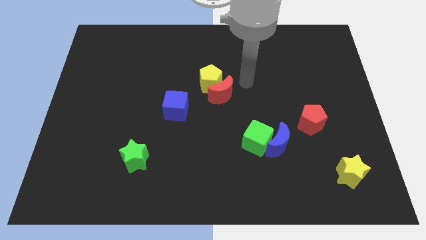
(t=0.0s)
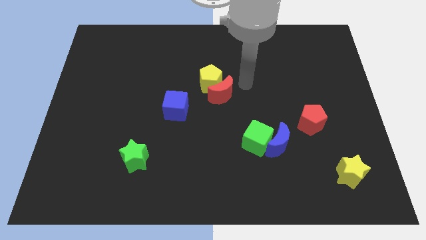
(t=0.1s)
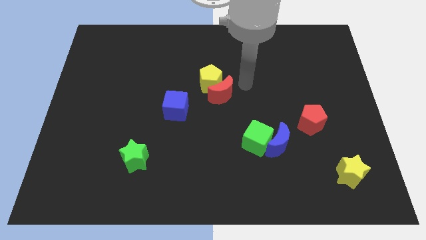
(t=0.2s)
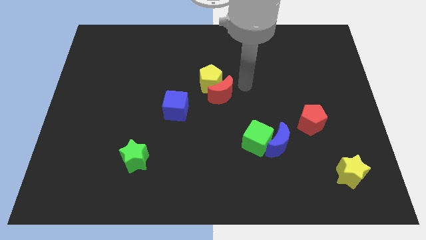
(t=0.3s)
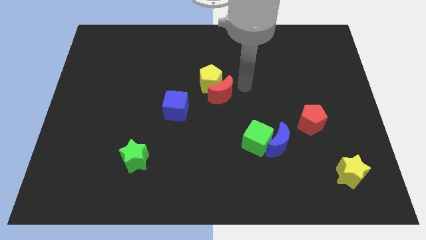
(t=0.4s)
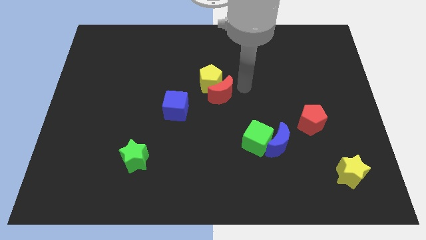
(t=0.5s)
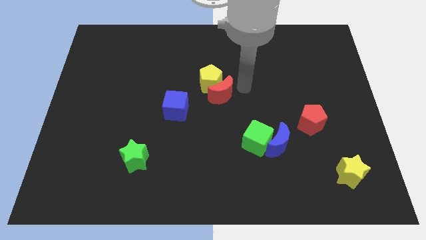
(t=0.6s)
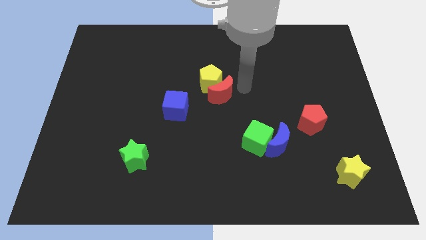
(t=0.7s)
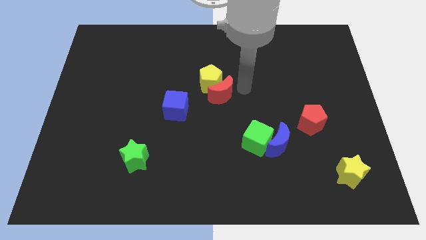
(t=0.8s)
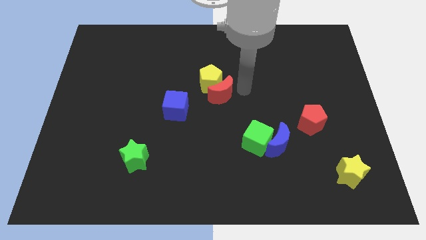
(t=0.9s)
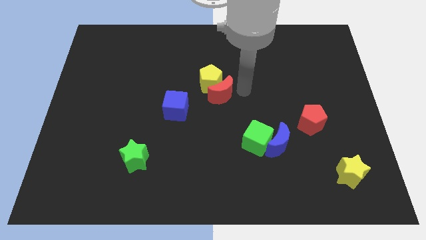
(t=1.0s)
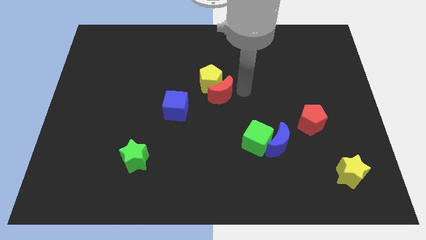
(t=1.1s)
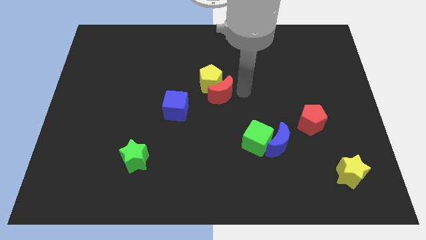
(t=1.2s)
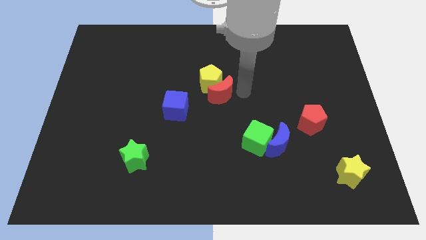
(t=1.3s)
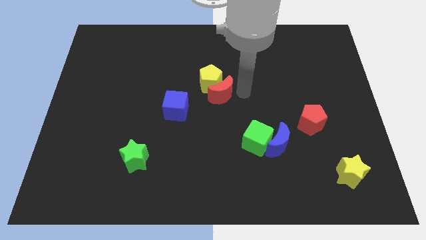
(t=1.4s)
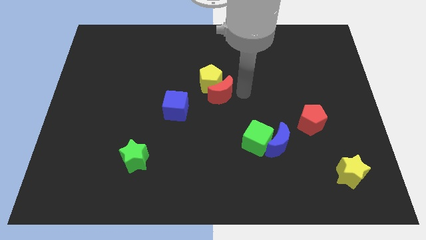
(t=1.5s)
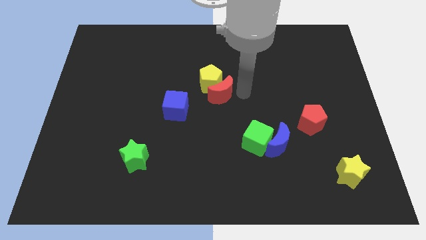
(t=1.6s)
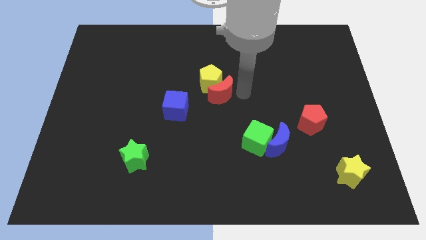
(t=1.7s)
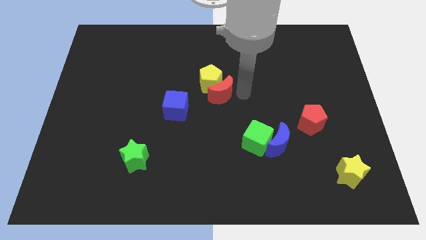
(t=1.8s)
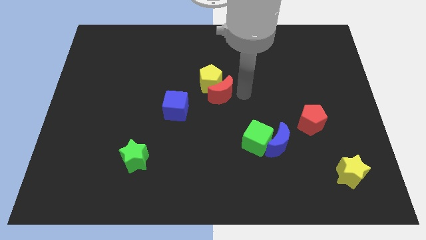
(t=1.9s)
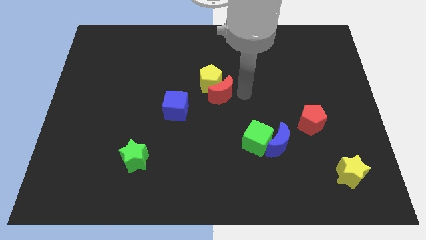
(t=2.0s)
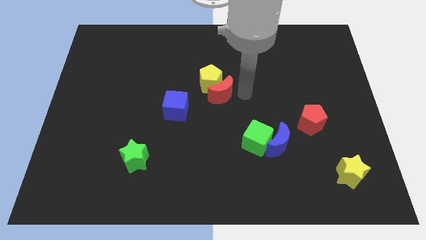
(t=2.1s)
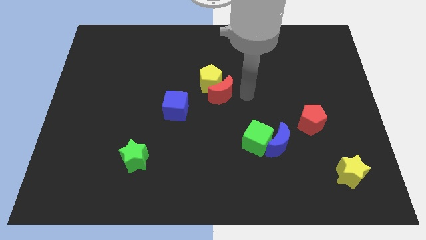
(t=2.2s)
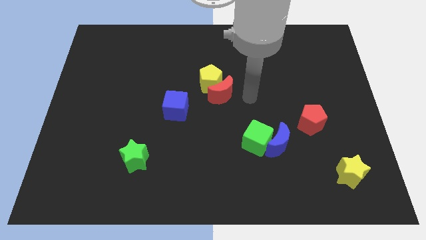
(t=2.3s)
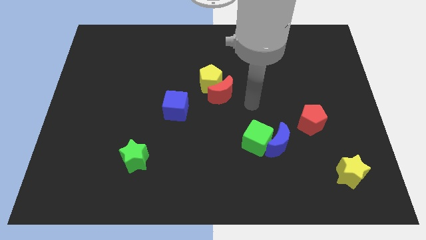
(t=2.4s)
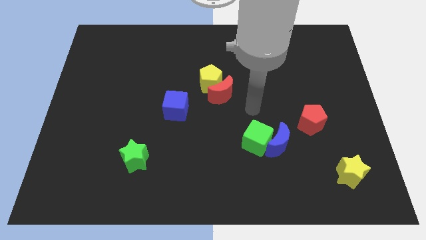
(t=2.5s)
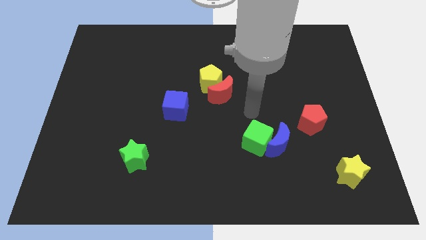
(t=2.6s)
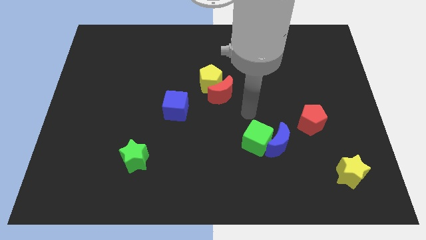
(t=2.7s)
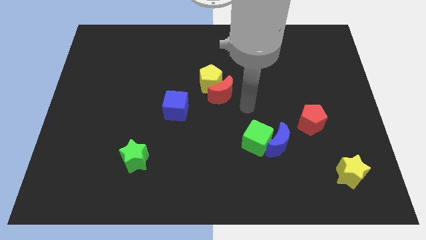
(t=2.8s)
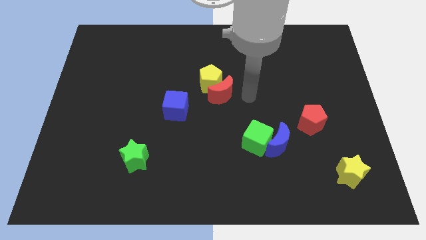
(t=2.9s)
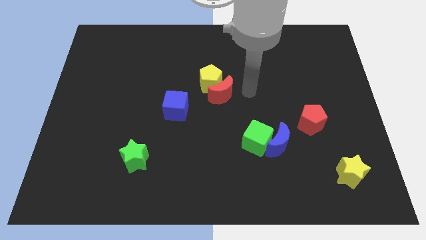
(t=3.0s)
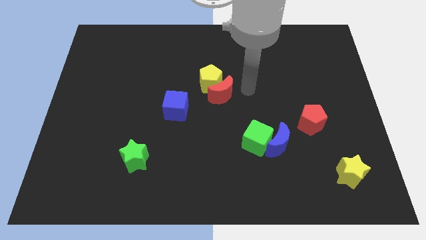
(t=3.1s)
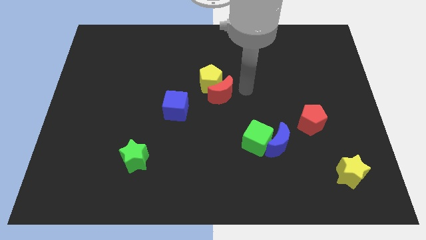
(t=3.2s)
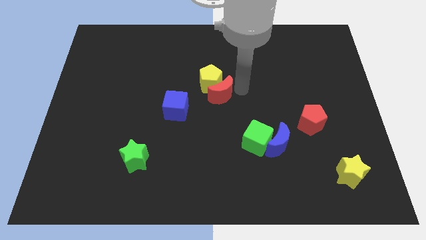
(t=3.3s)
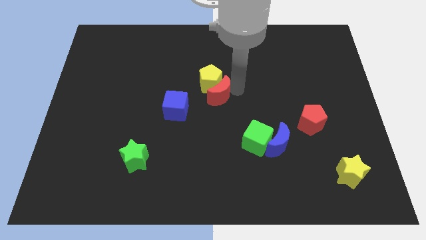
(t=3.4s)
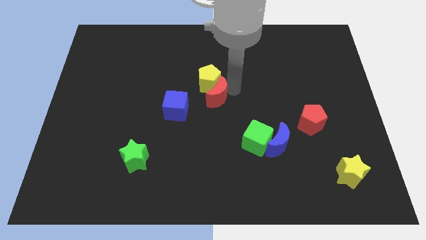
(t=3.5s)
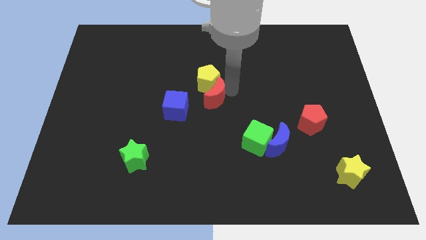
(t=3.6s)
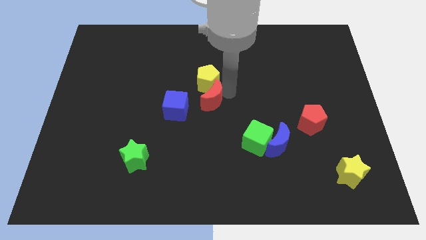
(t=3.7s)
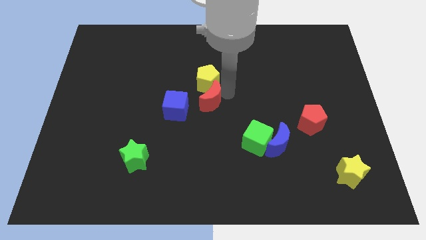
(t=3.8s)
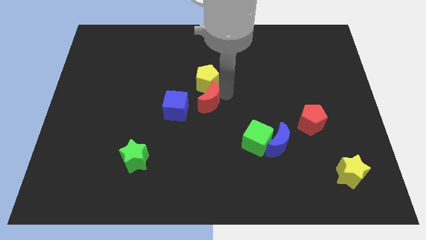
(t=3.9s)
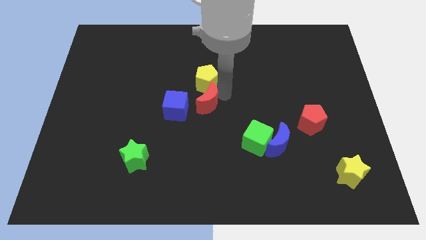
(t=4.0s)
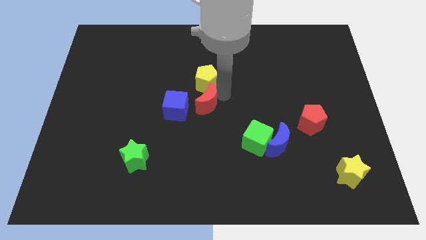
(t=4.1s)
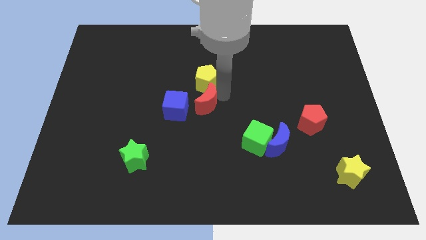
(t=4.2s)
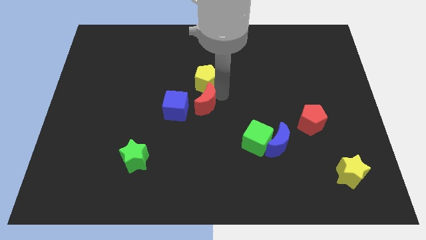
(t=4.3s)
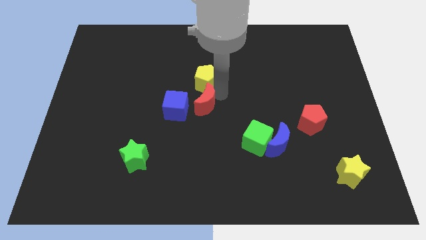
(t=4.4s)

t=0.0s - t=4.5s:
place the red moon right to the blue cube

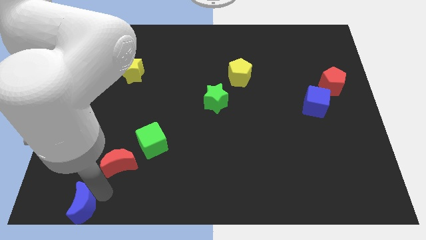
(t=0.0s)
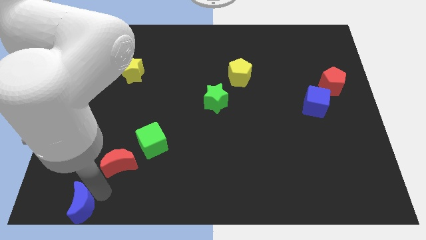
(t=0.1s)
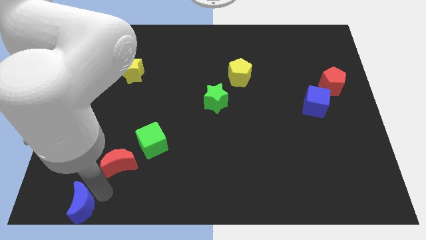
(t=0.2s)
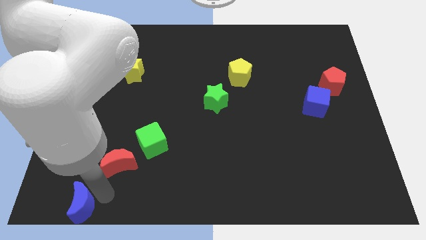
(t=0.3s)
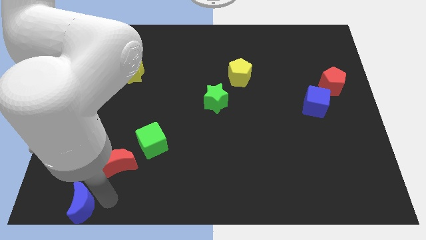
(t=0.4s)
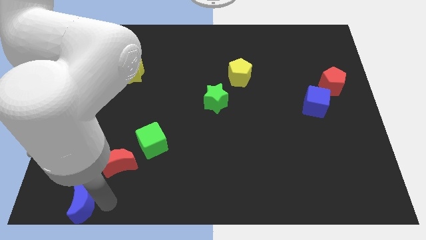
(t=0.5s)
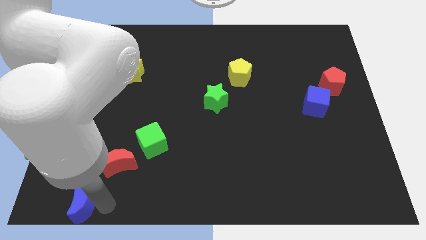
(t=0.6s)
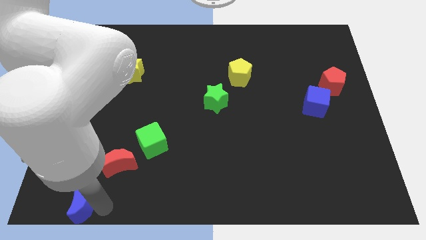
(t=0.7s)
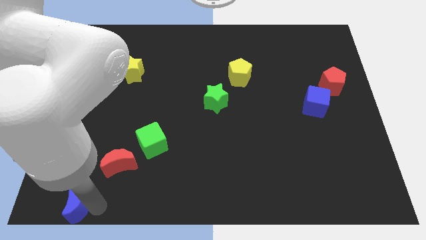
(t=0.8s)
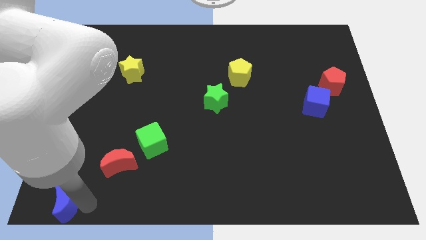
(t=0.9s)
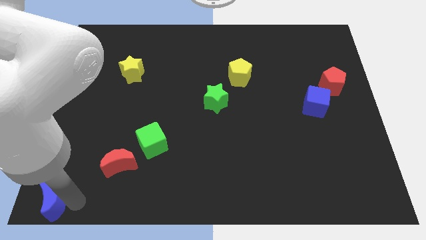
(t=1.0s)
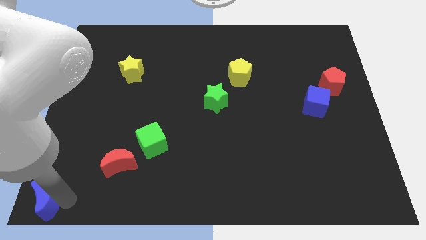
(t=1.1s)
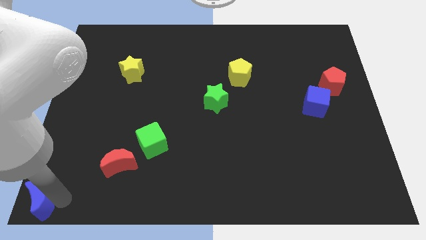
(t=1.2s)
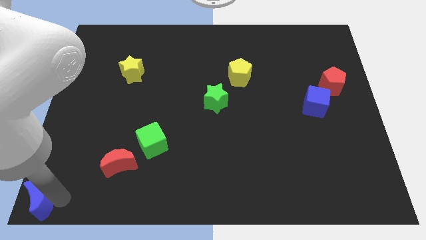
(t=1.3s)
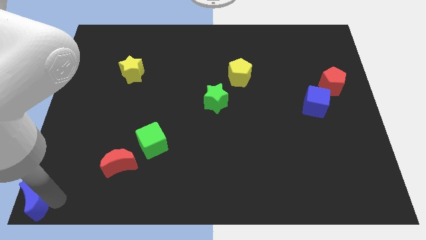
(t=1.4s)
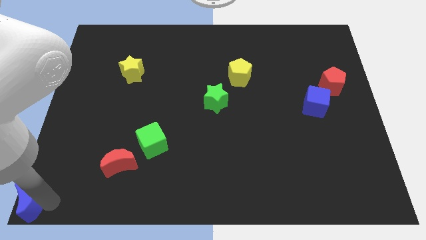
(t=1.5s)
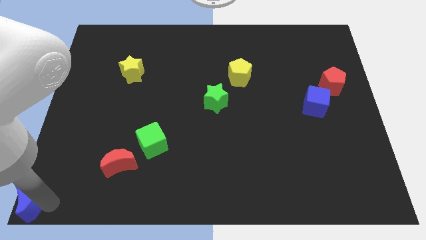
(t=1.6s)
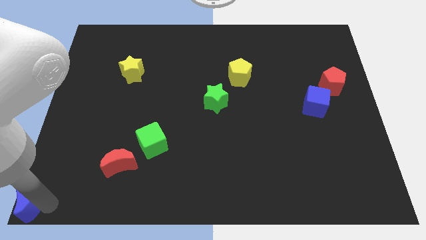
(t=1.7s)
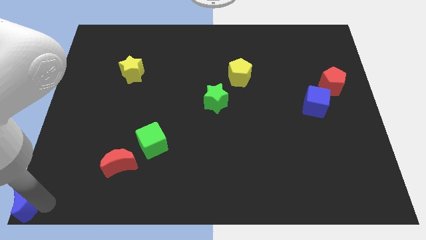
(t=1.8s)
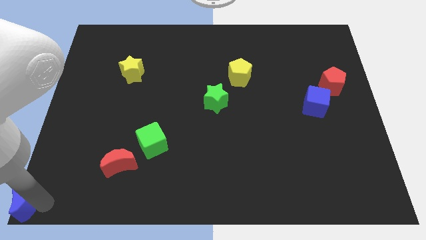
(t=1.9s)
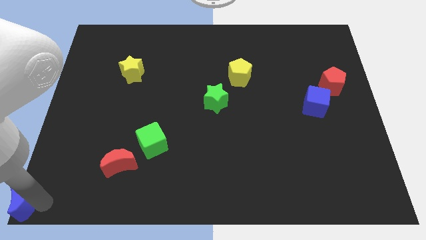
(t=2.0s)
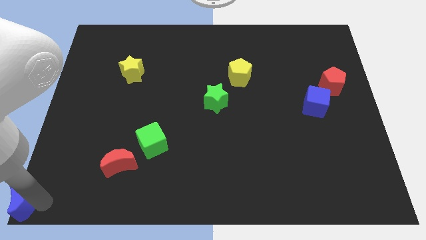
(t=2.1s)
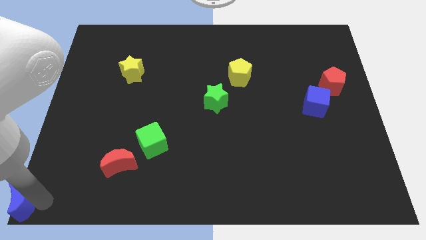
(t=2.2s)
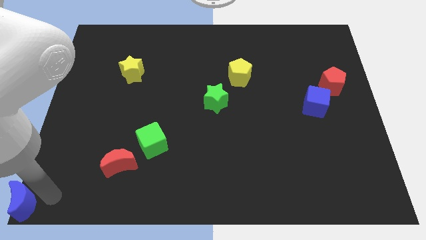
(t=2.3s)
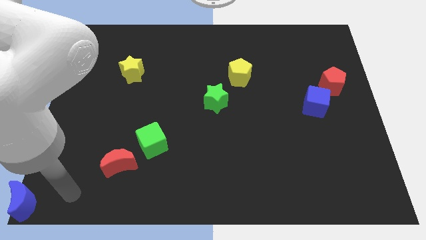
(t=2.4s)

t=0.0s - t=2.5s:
push the blue crescent to the bottom left corner of the board

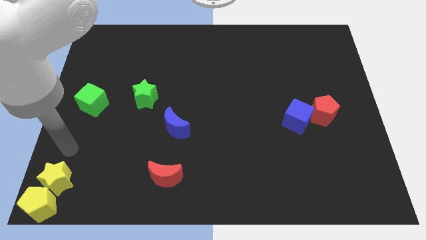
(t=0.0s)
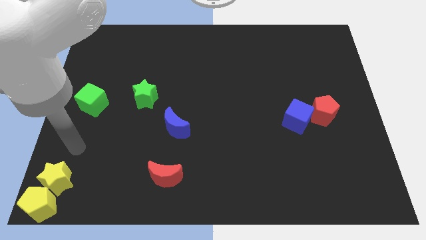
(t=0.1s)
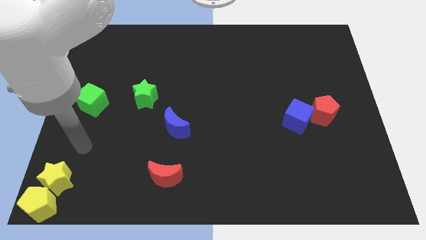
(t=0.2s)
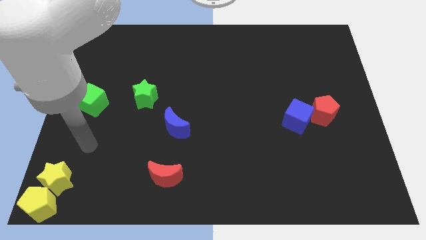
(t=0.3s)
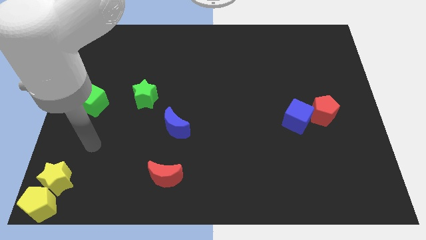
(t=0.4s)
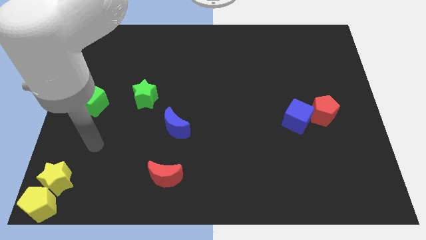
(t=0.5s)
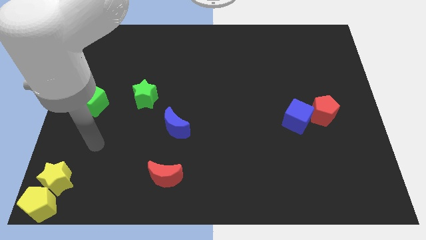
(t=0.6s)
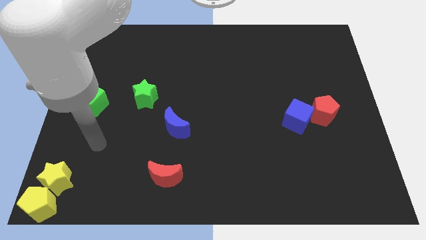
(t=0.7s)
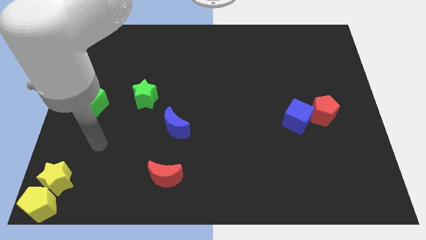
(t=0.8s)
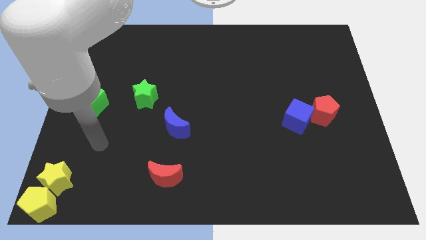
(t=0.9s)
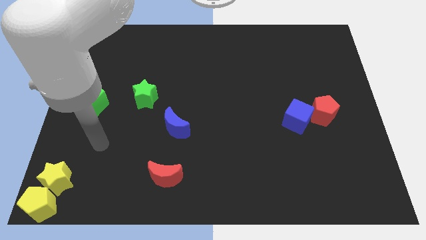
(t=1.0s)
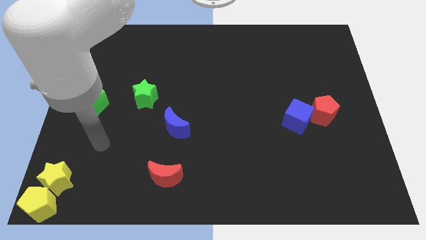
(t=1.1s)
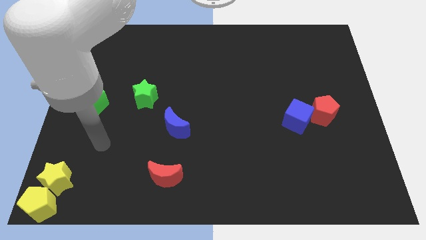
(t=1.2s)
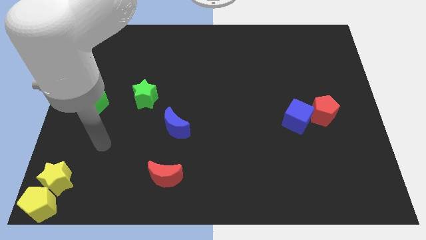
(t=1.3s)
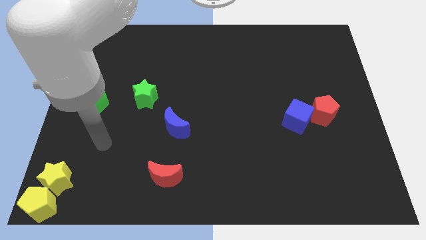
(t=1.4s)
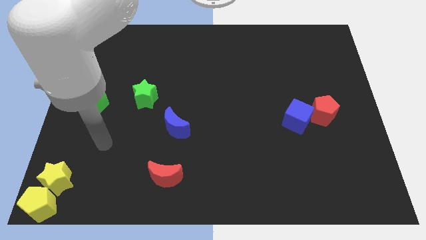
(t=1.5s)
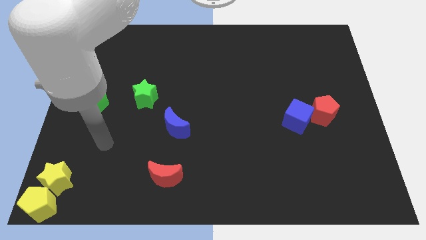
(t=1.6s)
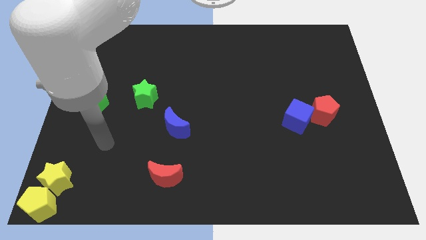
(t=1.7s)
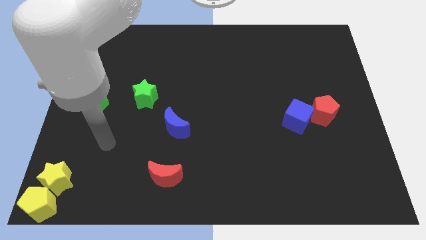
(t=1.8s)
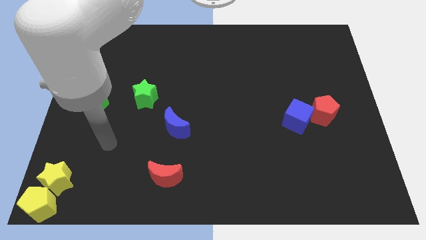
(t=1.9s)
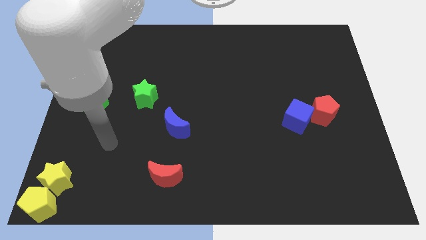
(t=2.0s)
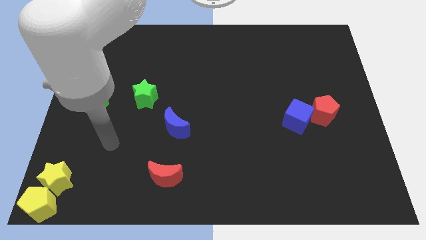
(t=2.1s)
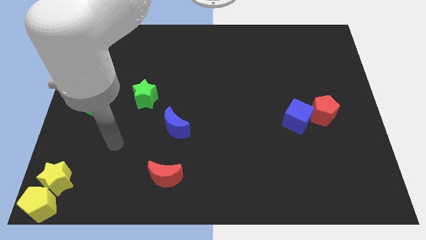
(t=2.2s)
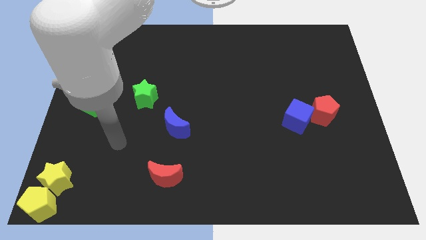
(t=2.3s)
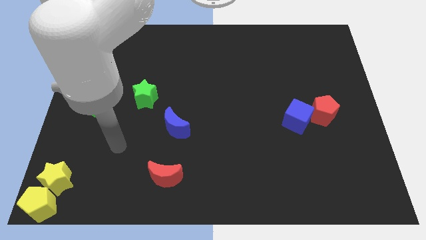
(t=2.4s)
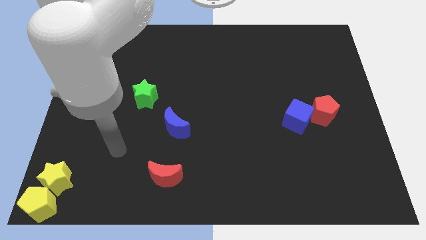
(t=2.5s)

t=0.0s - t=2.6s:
move yourself away from the yellow star
